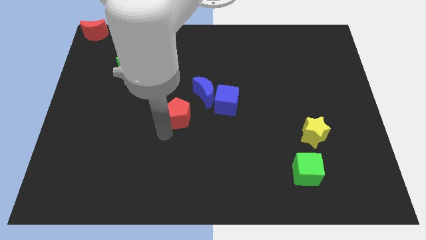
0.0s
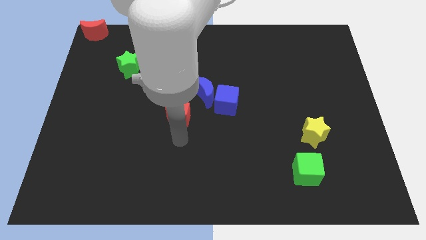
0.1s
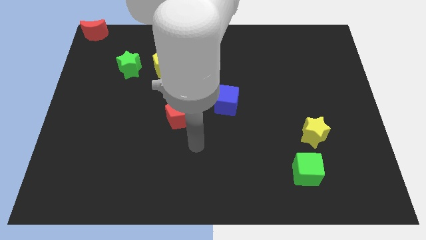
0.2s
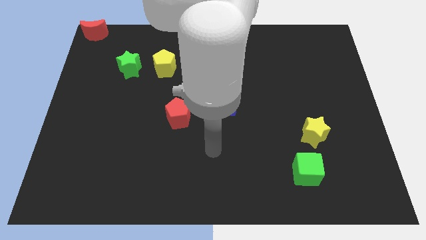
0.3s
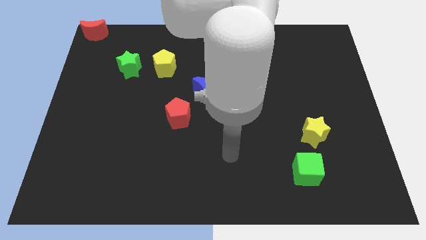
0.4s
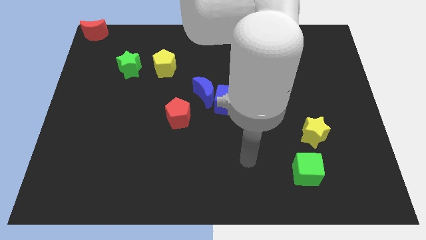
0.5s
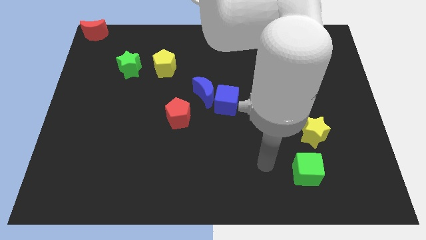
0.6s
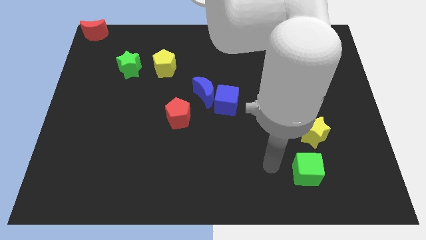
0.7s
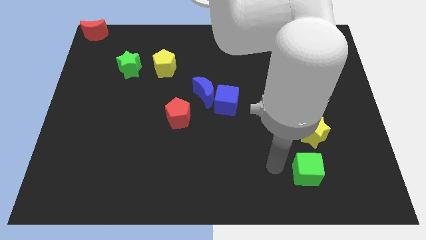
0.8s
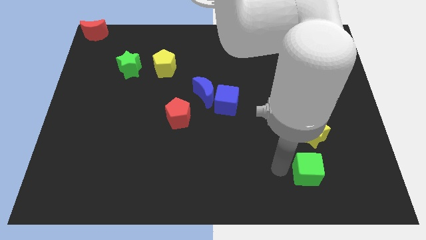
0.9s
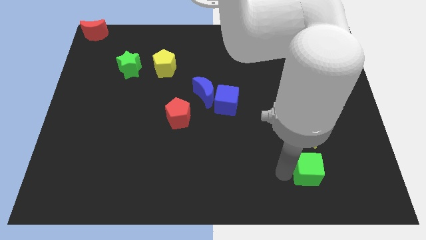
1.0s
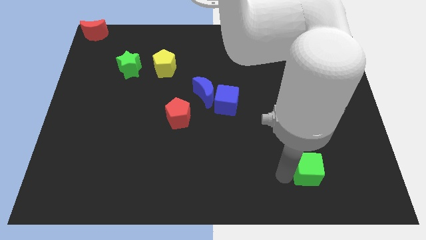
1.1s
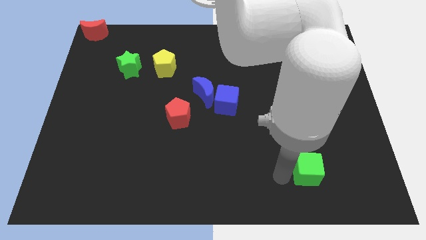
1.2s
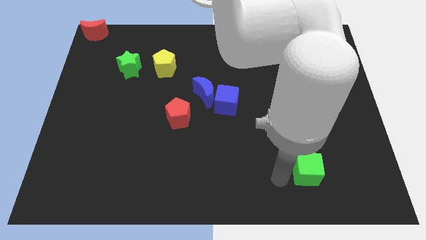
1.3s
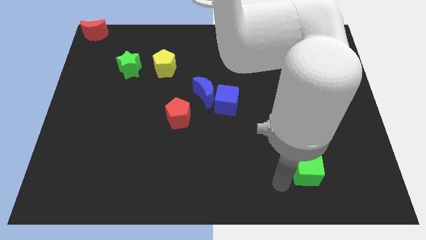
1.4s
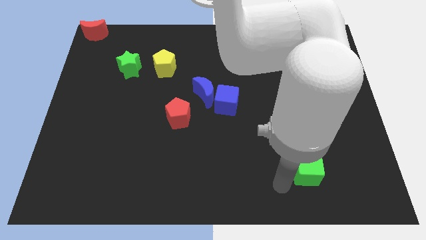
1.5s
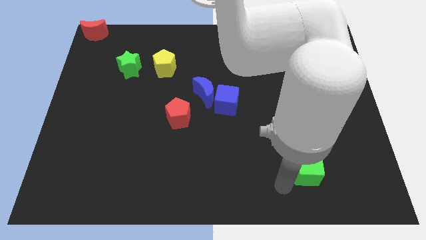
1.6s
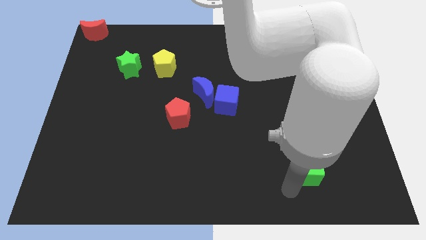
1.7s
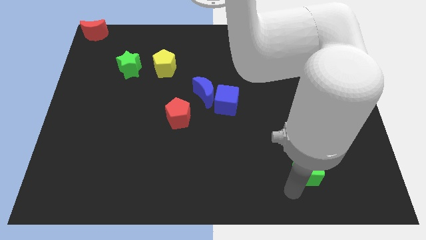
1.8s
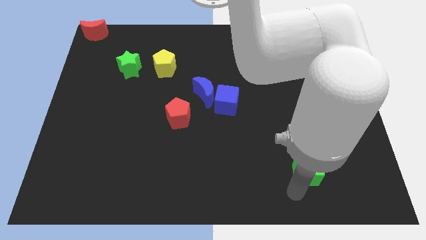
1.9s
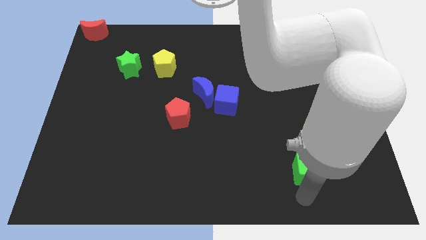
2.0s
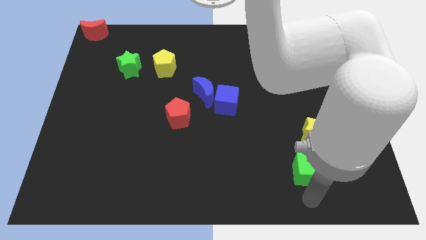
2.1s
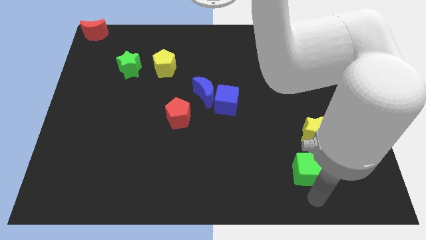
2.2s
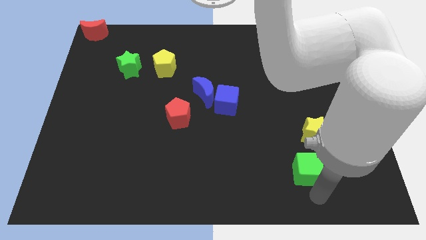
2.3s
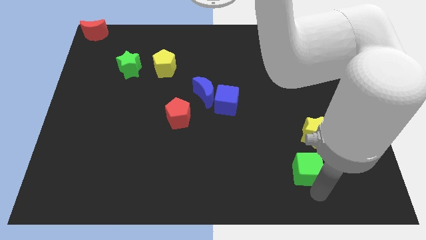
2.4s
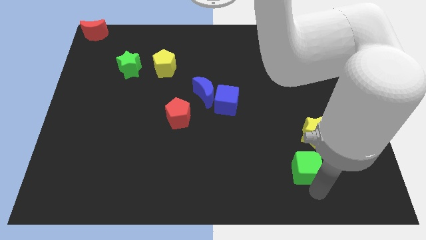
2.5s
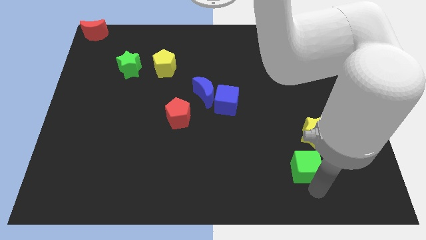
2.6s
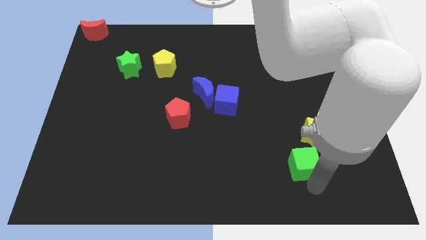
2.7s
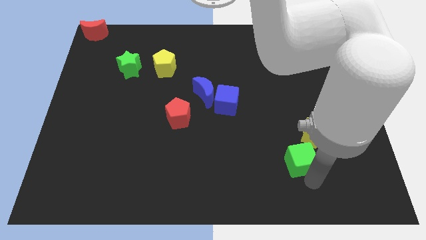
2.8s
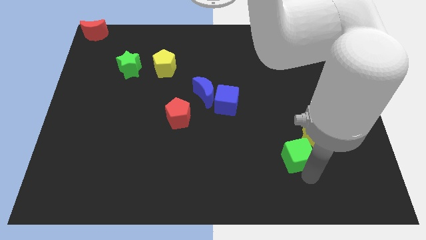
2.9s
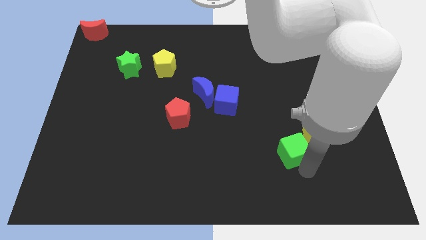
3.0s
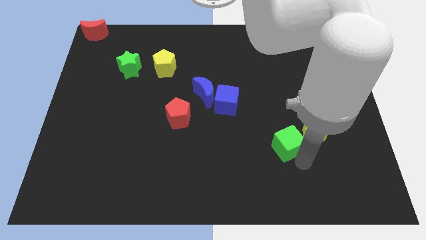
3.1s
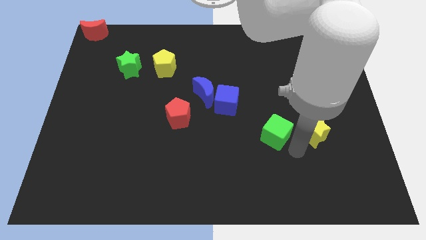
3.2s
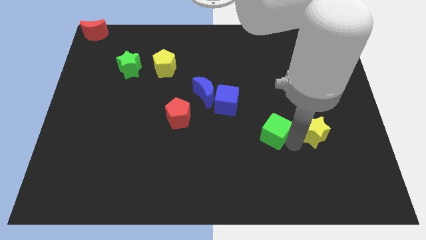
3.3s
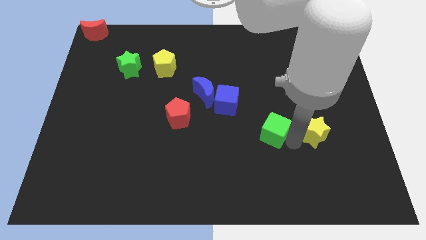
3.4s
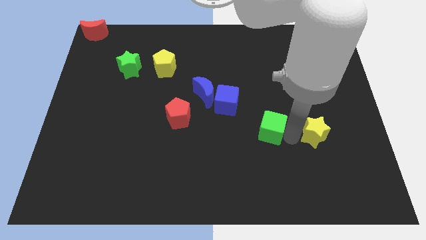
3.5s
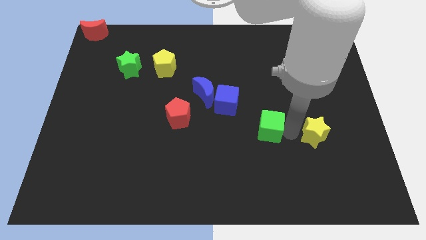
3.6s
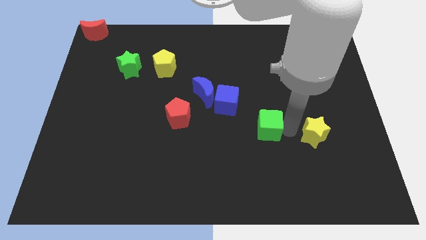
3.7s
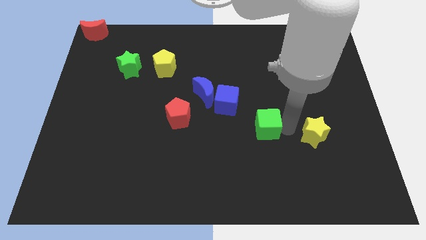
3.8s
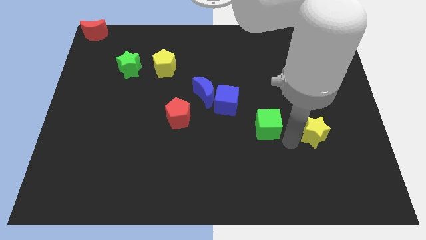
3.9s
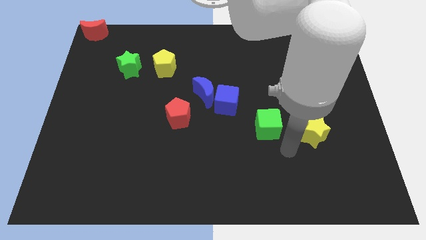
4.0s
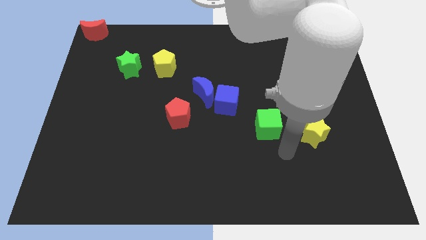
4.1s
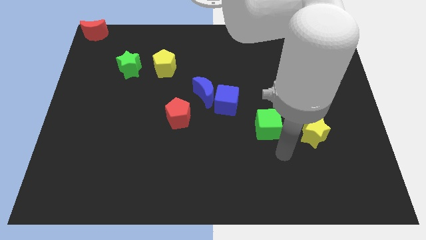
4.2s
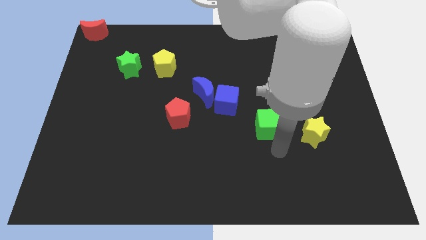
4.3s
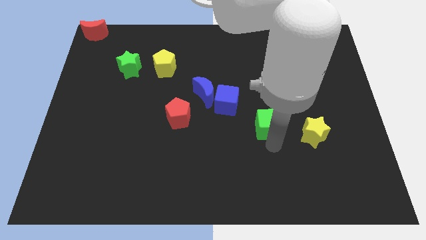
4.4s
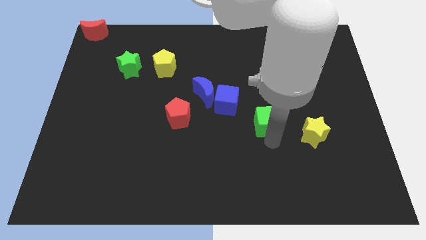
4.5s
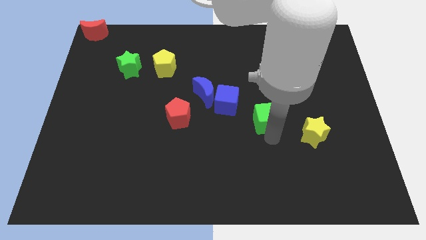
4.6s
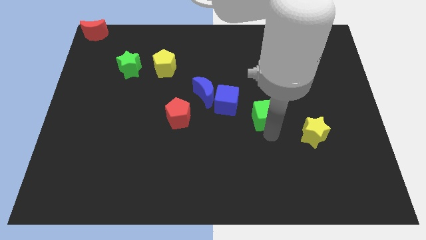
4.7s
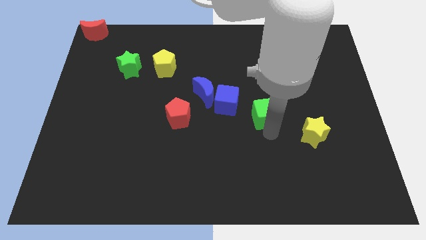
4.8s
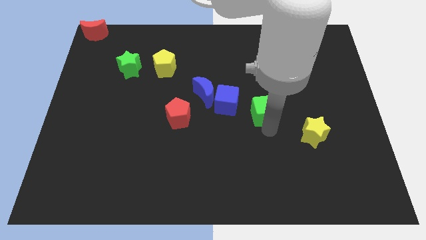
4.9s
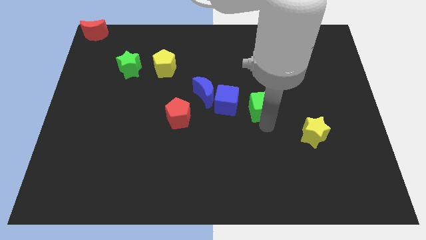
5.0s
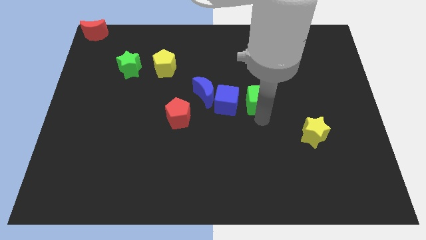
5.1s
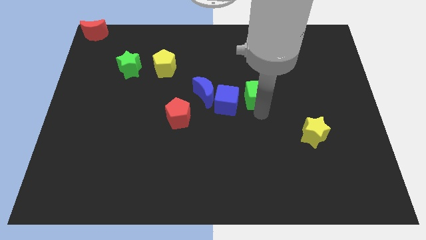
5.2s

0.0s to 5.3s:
place the green cube to the right of the blue cube

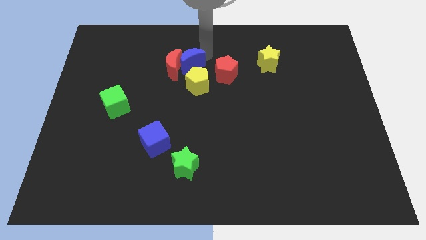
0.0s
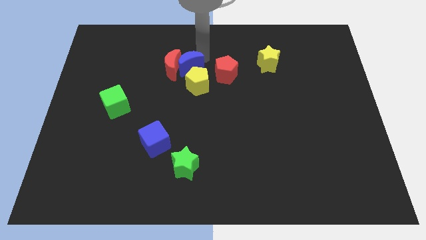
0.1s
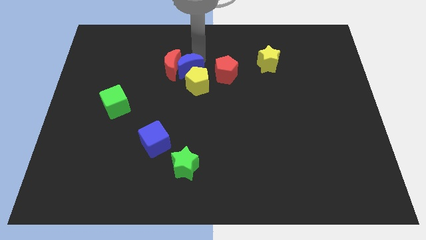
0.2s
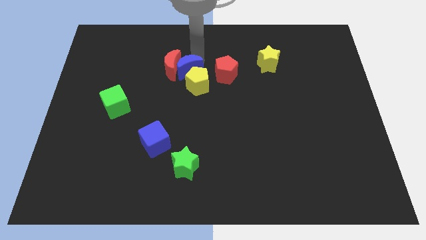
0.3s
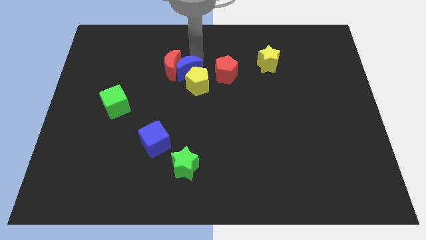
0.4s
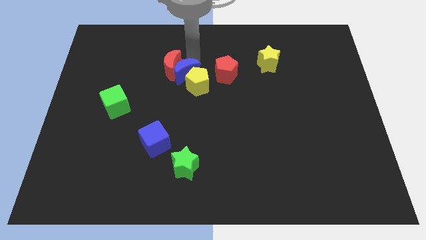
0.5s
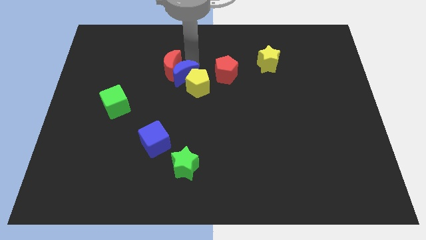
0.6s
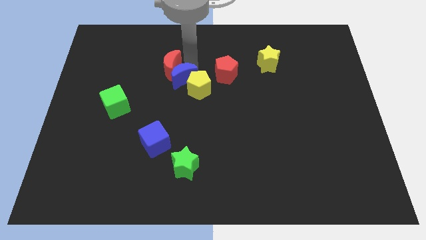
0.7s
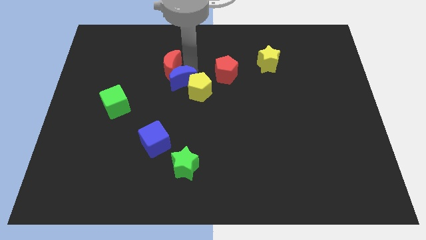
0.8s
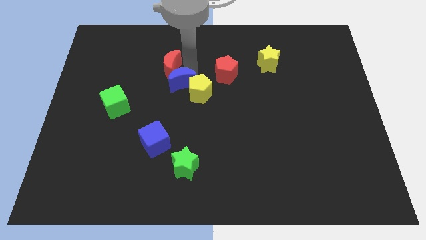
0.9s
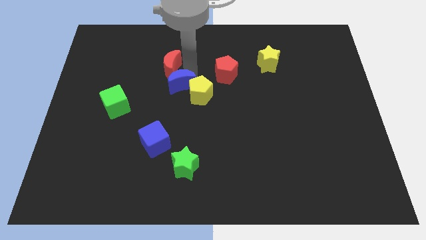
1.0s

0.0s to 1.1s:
push the blue moon in to the yellow pentagon

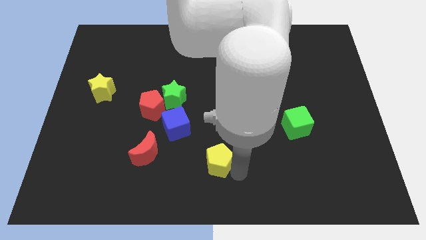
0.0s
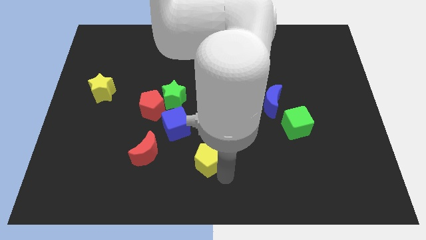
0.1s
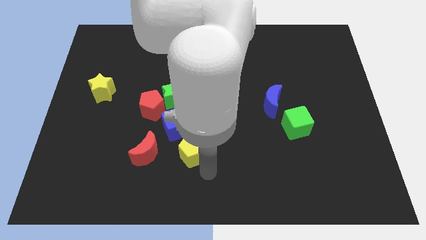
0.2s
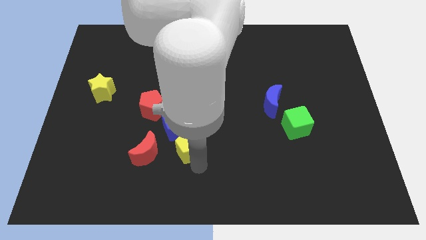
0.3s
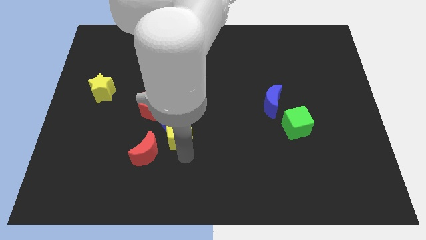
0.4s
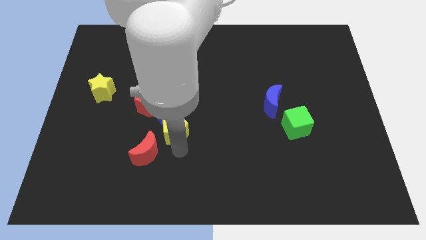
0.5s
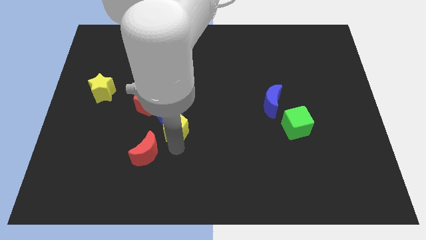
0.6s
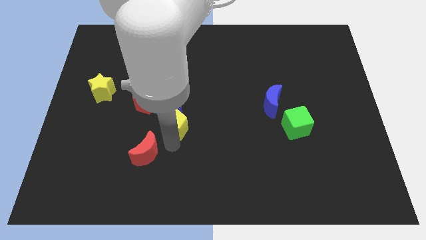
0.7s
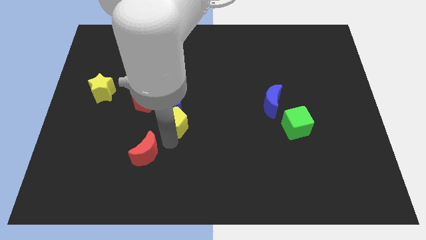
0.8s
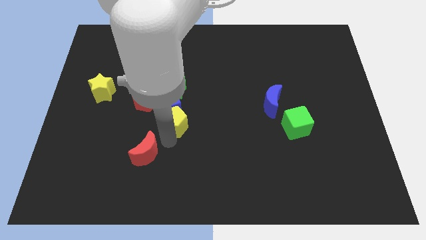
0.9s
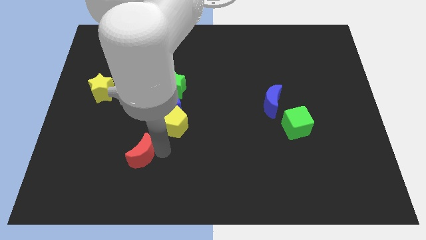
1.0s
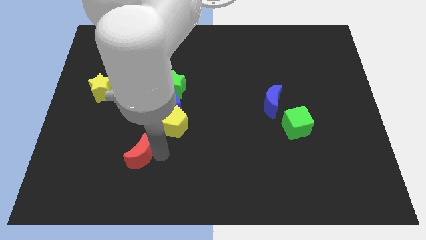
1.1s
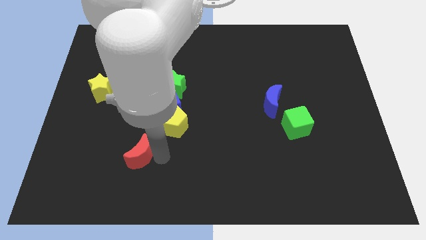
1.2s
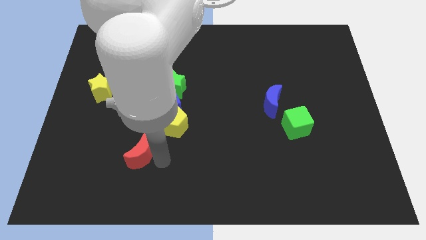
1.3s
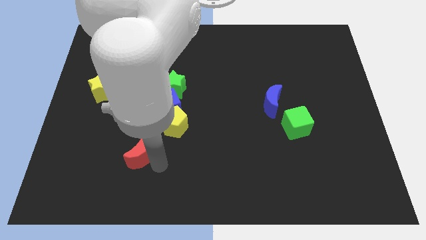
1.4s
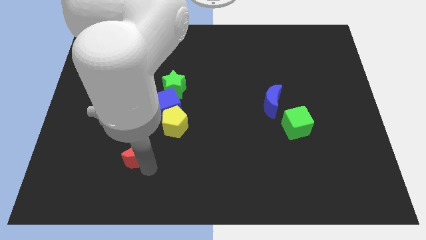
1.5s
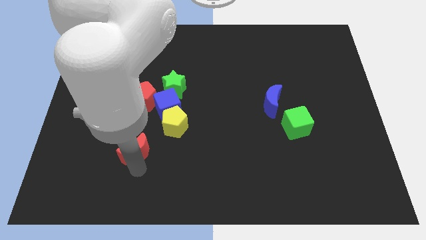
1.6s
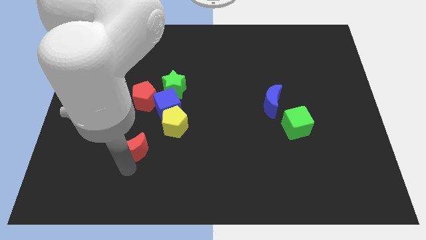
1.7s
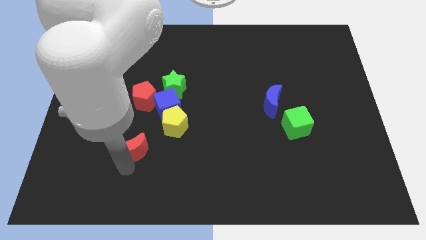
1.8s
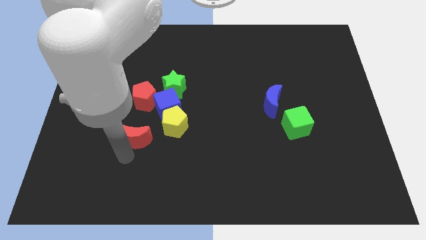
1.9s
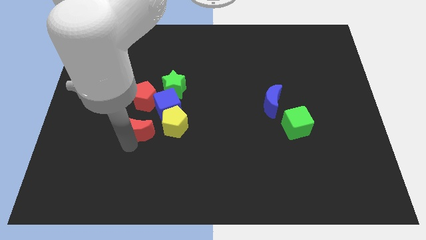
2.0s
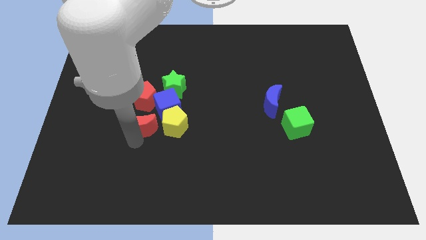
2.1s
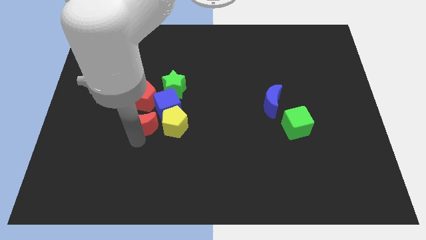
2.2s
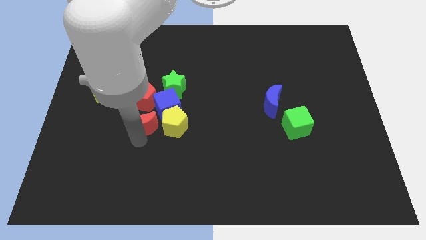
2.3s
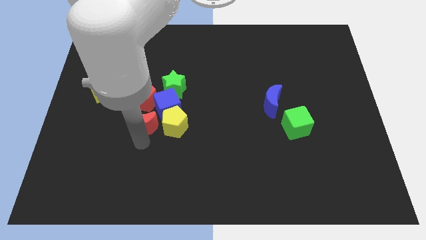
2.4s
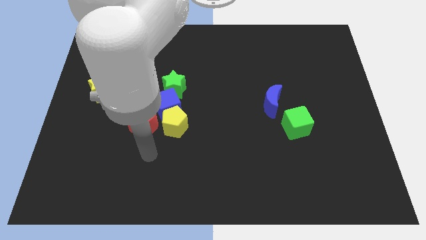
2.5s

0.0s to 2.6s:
place red crescent below red pentagon

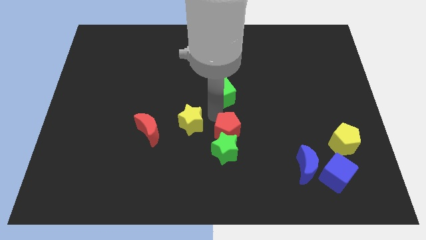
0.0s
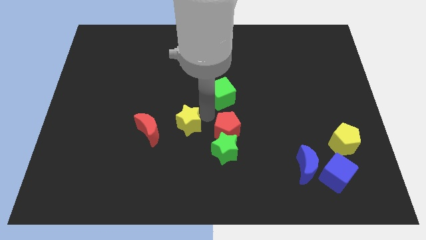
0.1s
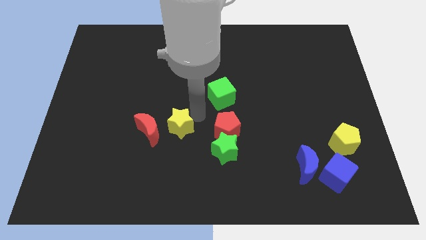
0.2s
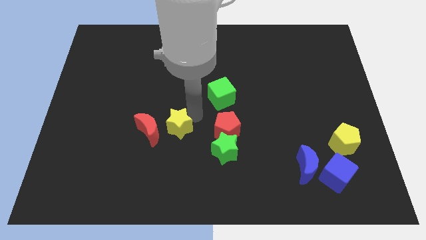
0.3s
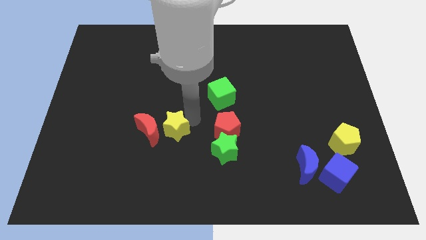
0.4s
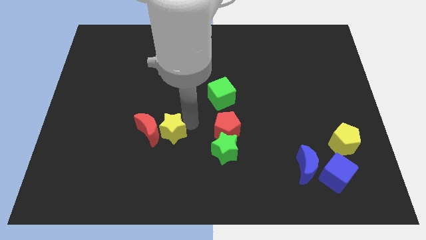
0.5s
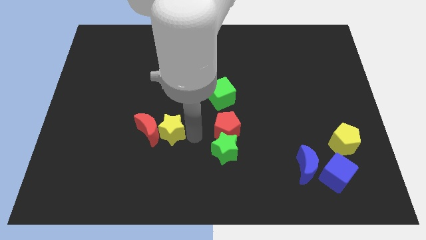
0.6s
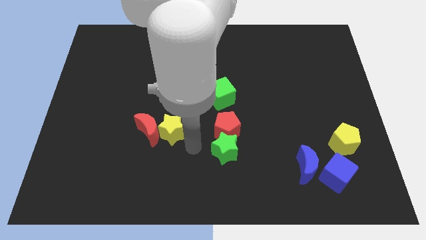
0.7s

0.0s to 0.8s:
move the yellow star to the right of the red crescent
